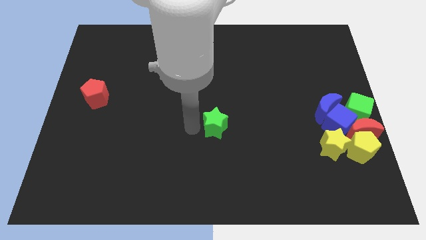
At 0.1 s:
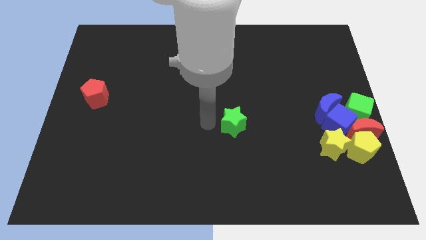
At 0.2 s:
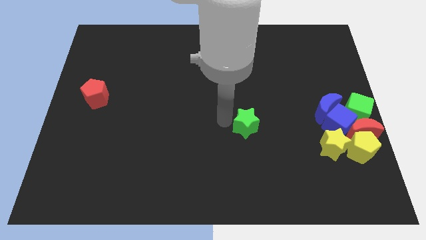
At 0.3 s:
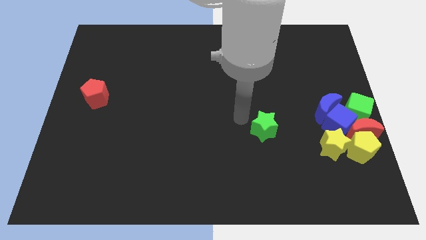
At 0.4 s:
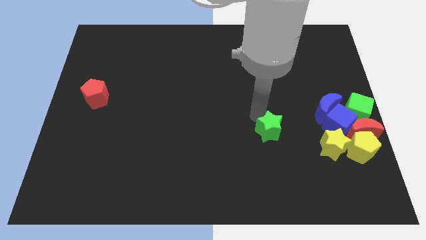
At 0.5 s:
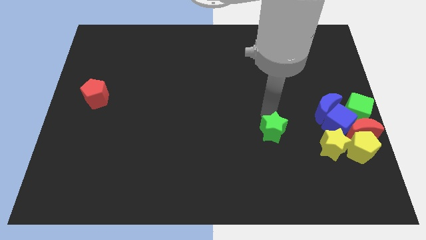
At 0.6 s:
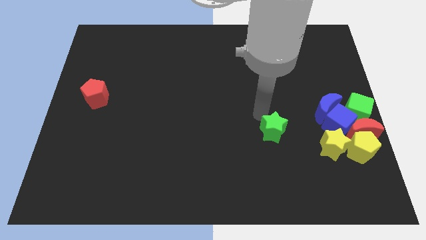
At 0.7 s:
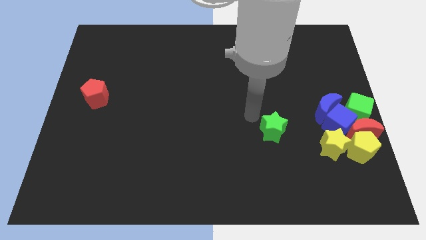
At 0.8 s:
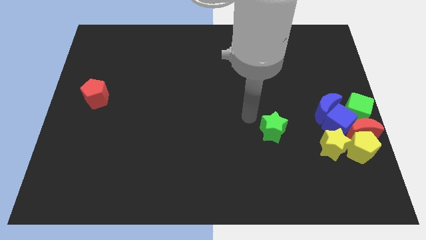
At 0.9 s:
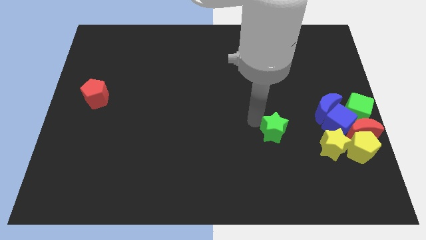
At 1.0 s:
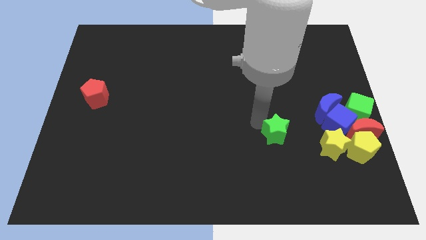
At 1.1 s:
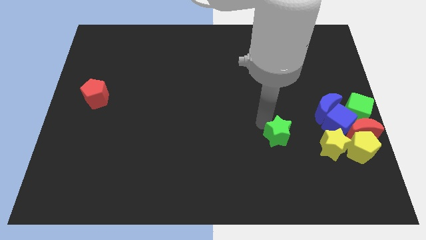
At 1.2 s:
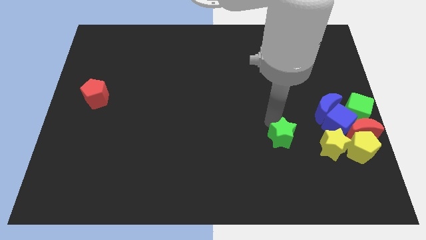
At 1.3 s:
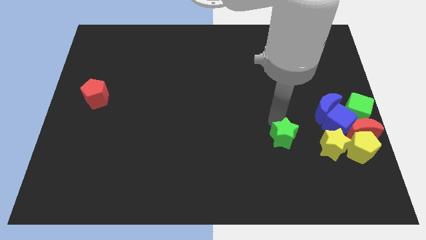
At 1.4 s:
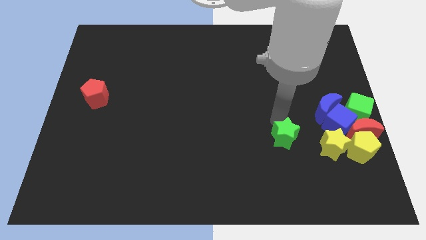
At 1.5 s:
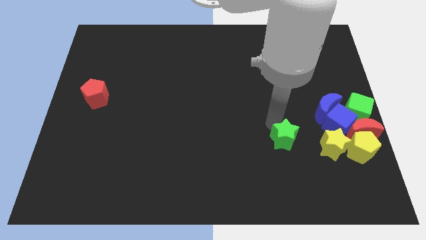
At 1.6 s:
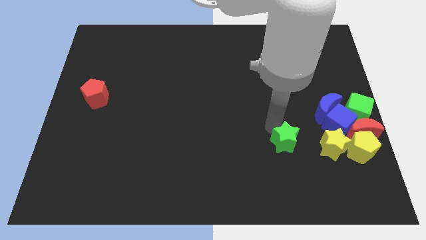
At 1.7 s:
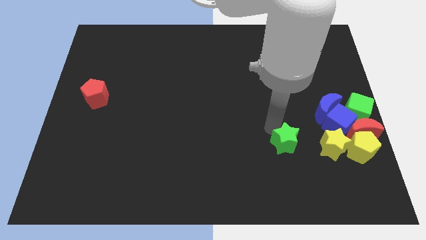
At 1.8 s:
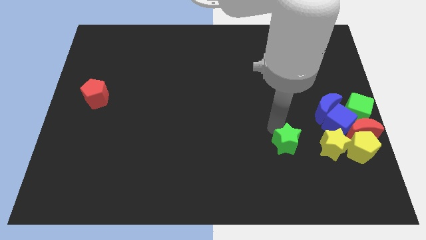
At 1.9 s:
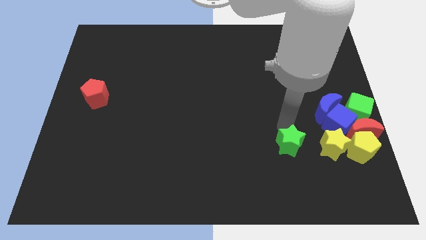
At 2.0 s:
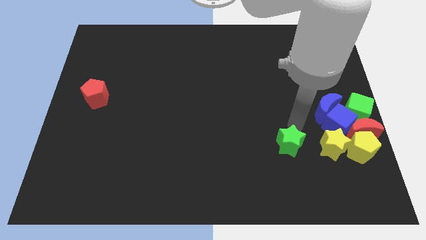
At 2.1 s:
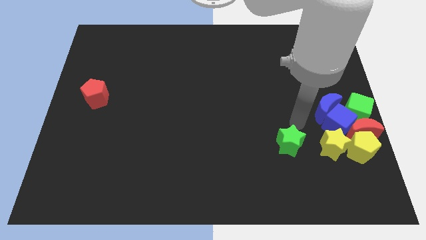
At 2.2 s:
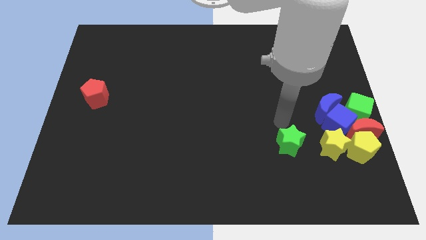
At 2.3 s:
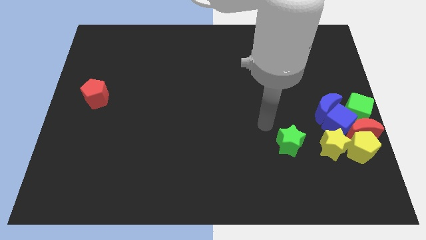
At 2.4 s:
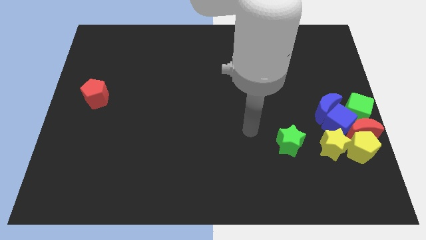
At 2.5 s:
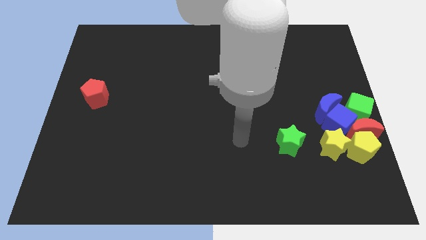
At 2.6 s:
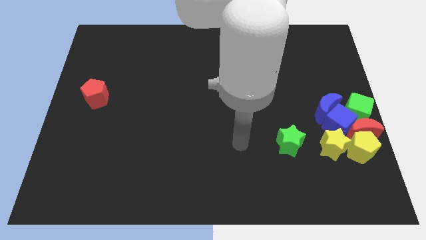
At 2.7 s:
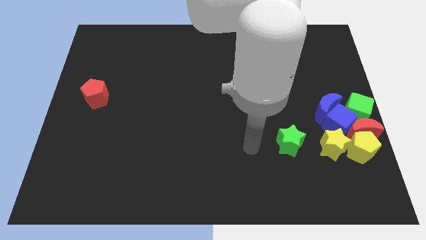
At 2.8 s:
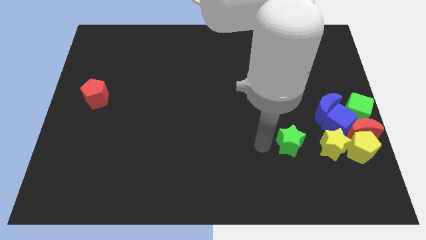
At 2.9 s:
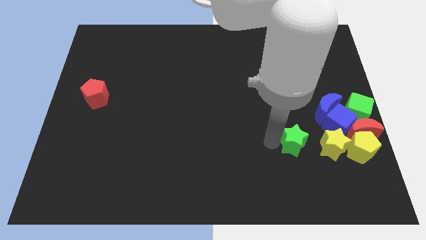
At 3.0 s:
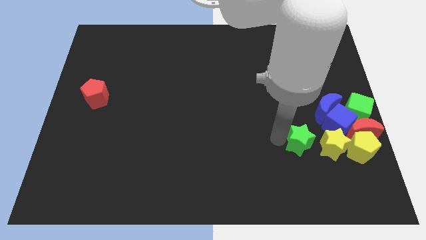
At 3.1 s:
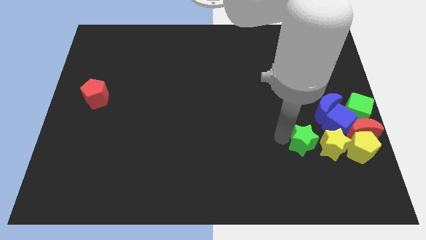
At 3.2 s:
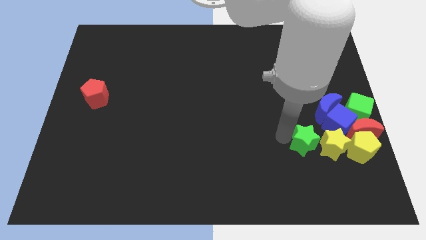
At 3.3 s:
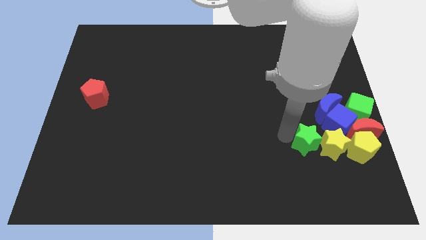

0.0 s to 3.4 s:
move the green star next to the left side of the yellow star

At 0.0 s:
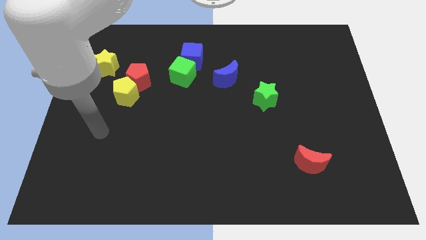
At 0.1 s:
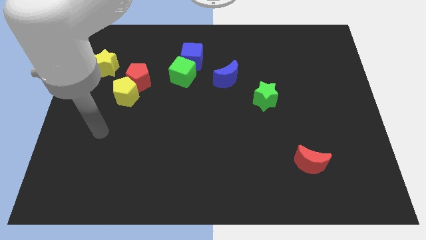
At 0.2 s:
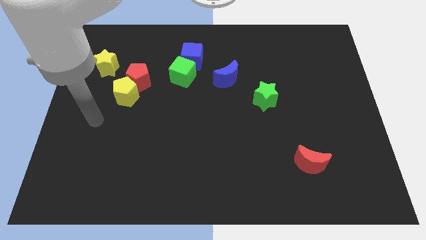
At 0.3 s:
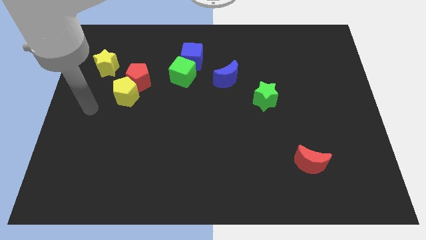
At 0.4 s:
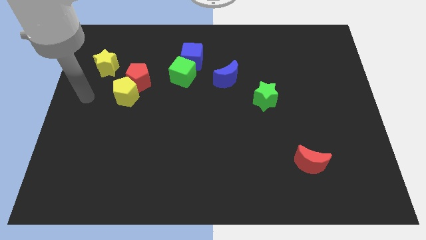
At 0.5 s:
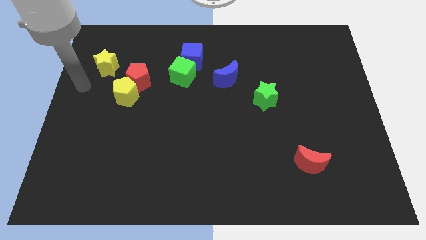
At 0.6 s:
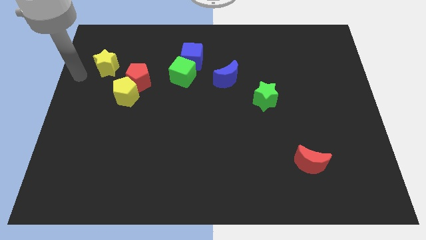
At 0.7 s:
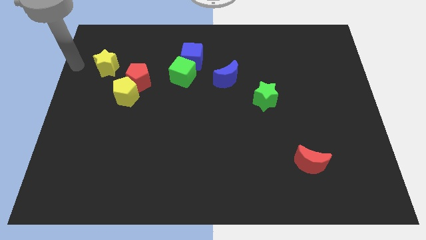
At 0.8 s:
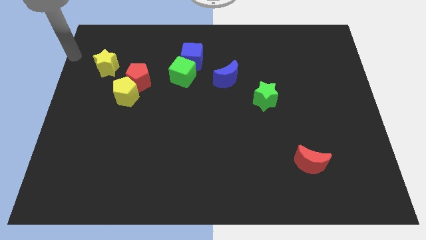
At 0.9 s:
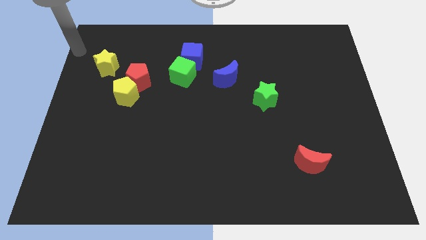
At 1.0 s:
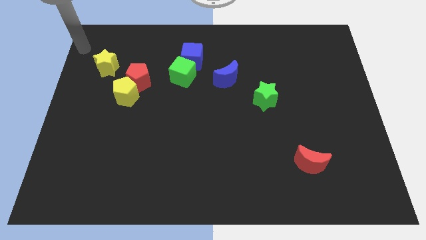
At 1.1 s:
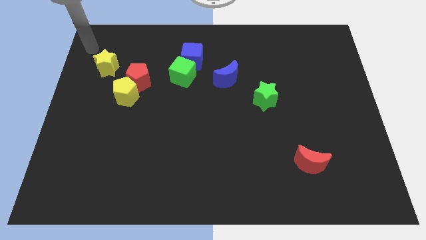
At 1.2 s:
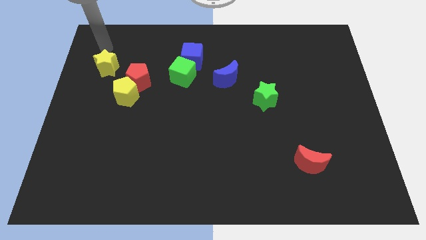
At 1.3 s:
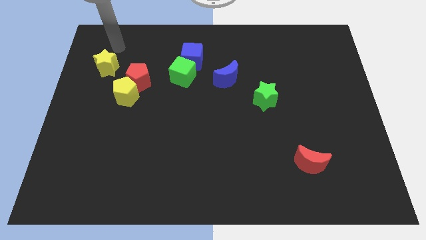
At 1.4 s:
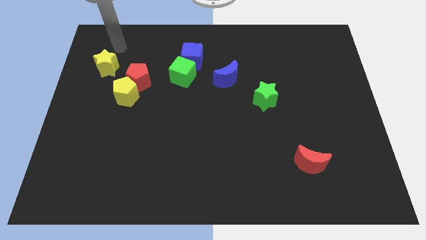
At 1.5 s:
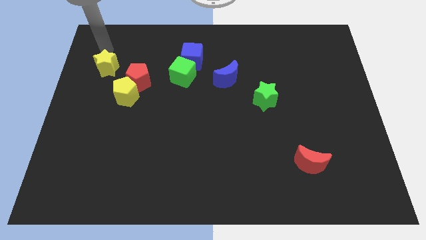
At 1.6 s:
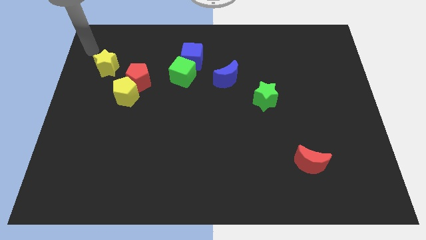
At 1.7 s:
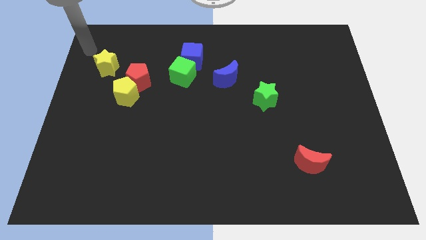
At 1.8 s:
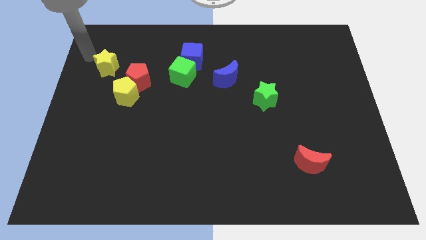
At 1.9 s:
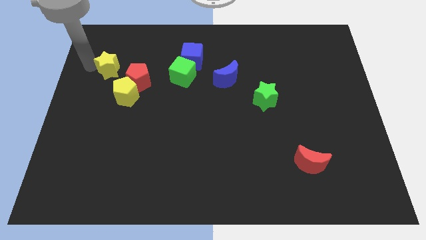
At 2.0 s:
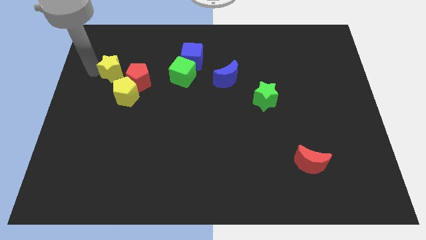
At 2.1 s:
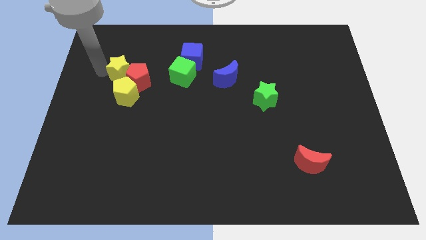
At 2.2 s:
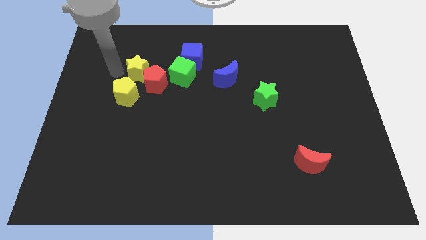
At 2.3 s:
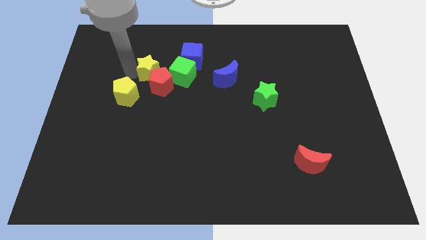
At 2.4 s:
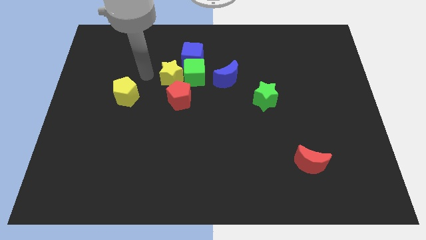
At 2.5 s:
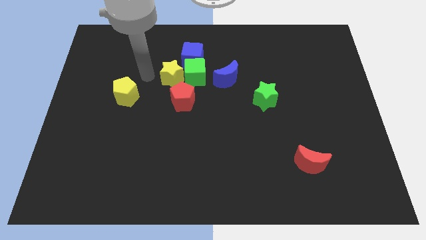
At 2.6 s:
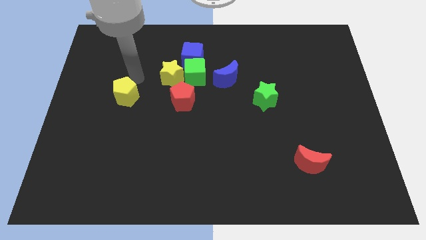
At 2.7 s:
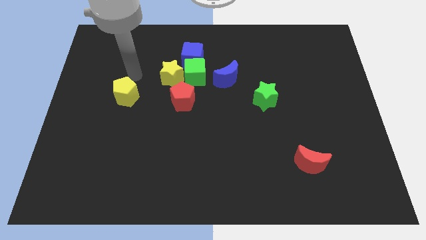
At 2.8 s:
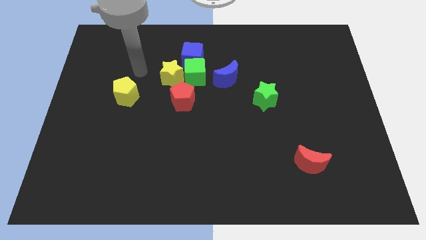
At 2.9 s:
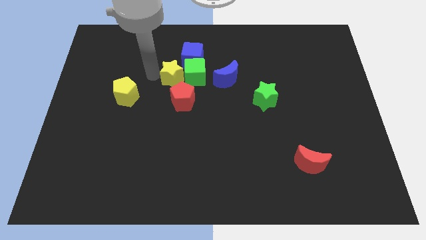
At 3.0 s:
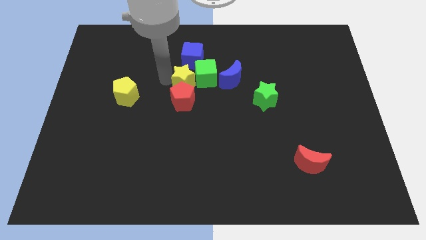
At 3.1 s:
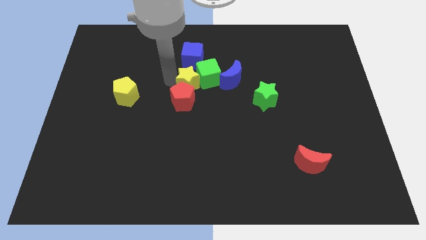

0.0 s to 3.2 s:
push the yellow star in between the red pentagon and blue cube

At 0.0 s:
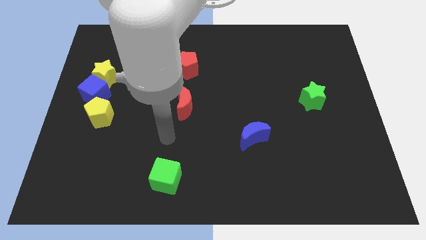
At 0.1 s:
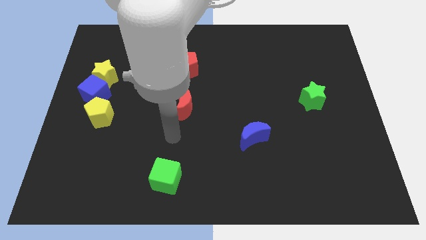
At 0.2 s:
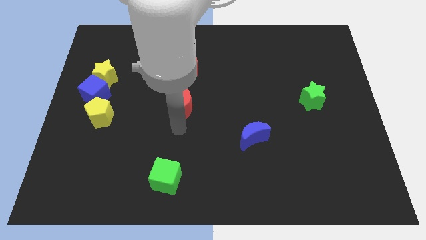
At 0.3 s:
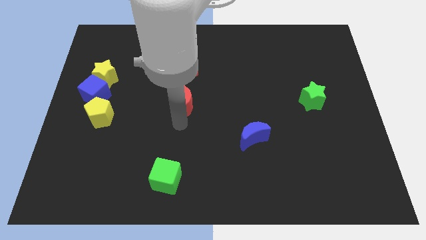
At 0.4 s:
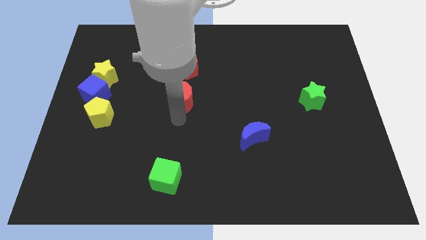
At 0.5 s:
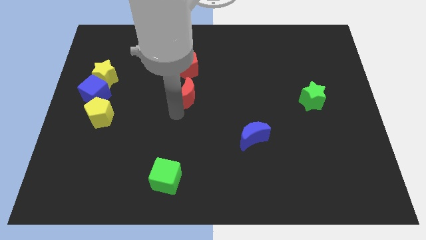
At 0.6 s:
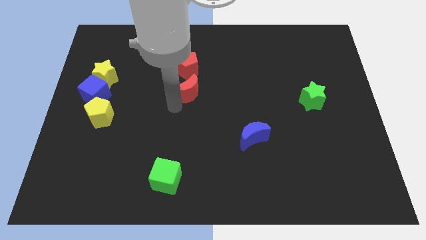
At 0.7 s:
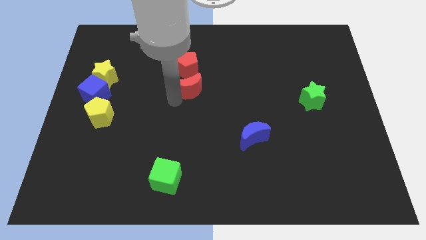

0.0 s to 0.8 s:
place the red pentagon below the red moon

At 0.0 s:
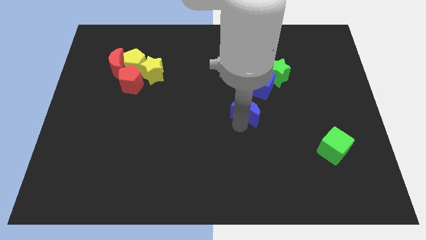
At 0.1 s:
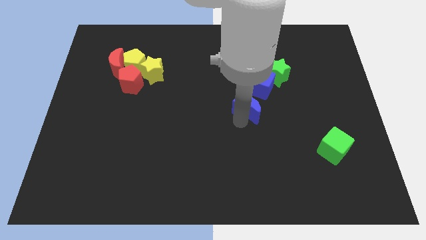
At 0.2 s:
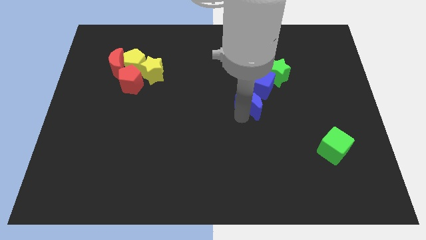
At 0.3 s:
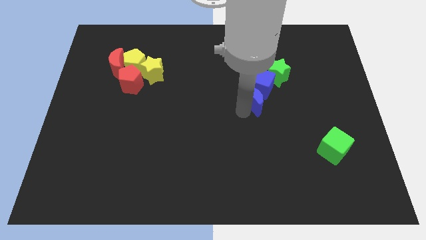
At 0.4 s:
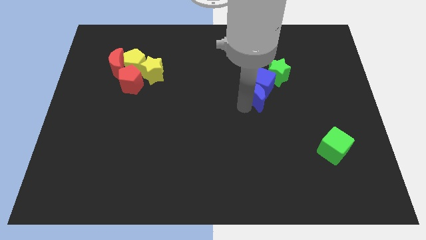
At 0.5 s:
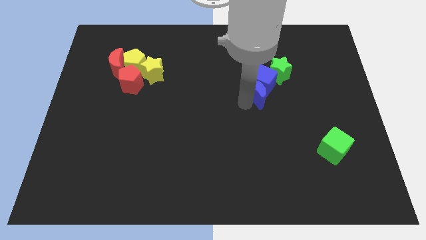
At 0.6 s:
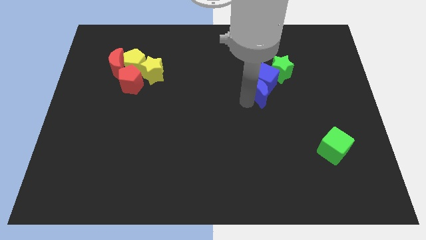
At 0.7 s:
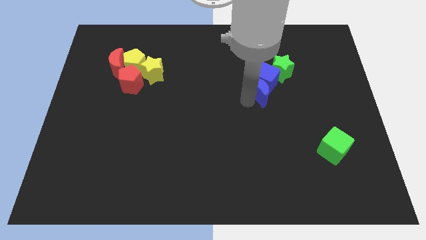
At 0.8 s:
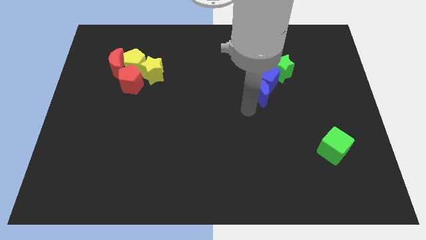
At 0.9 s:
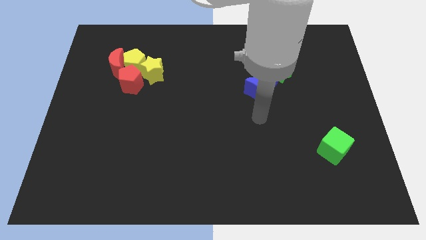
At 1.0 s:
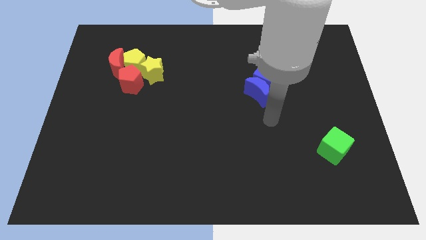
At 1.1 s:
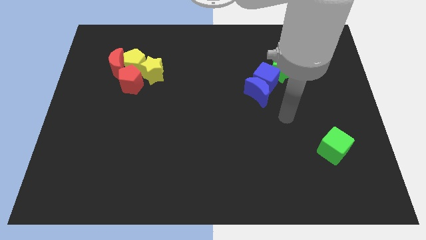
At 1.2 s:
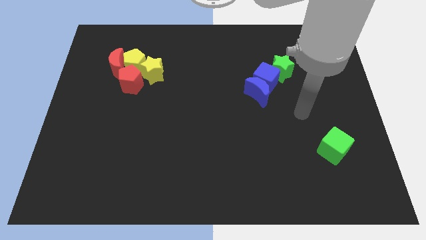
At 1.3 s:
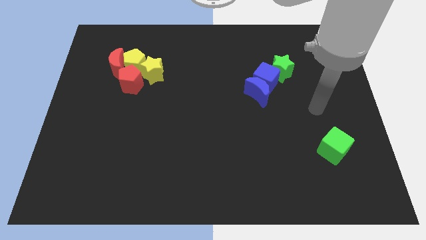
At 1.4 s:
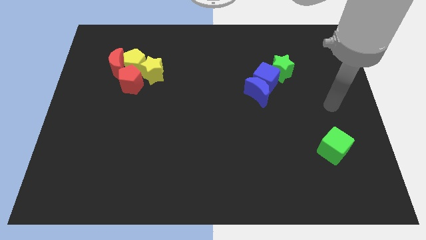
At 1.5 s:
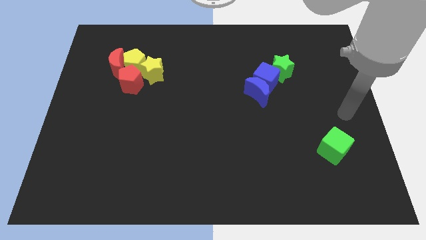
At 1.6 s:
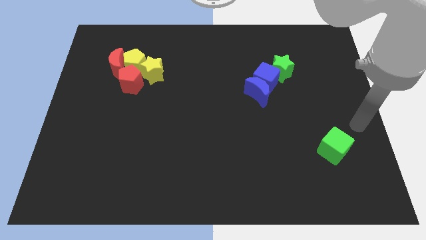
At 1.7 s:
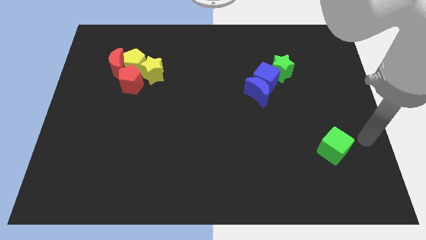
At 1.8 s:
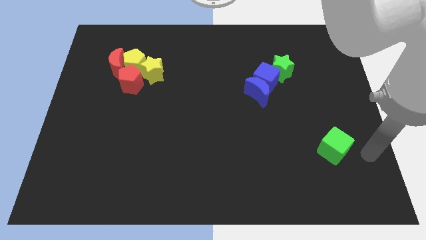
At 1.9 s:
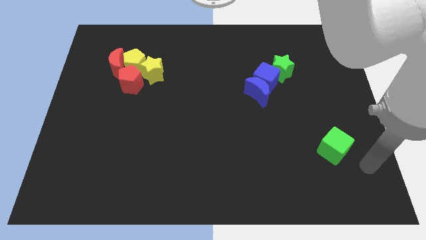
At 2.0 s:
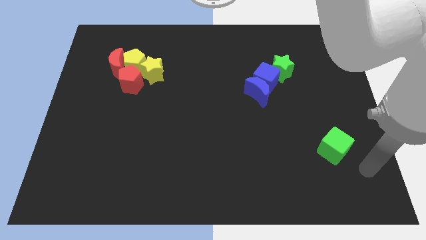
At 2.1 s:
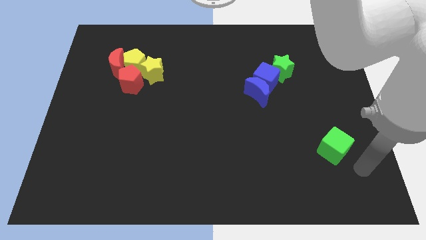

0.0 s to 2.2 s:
push the blue cube and green star with blue crescent
